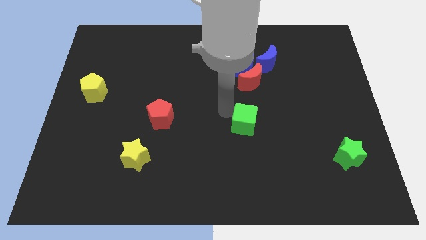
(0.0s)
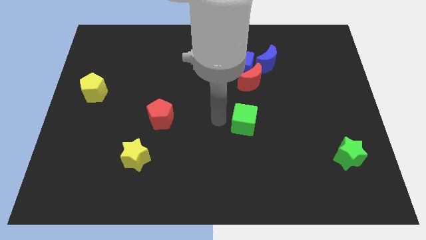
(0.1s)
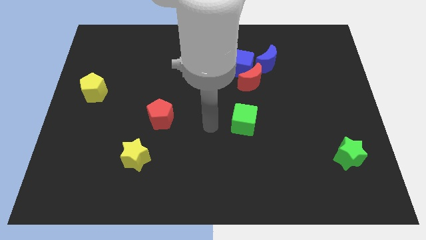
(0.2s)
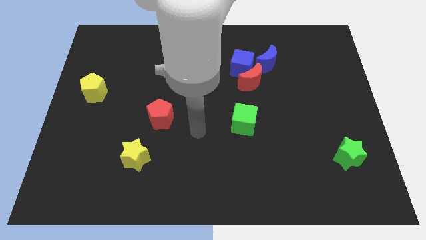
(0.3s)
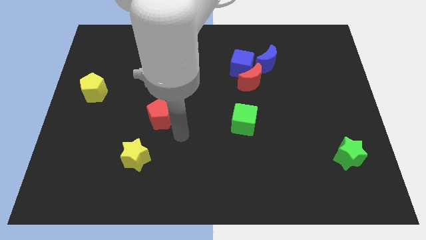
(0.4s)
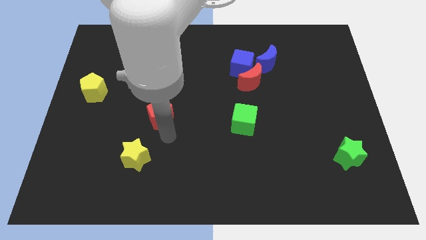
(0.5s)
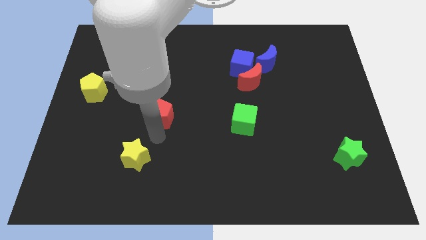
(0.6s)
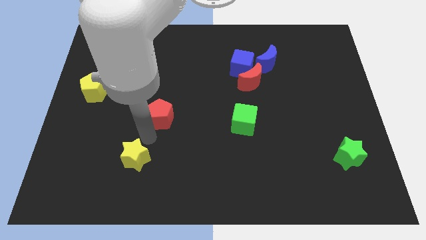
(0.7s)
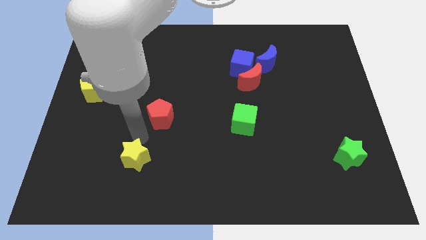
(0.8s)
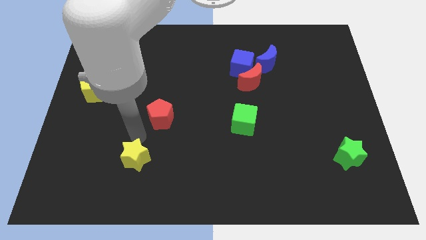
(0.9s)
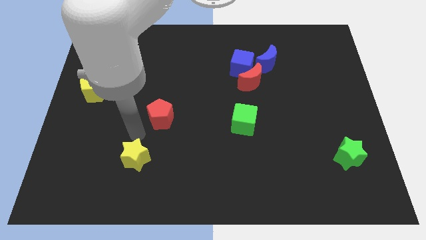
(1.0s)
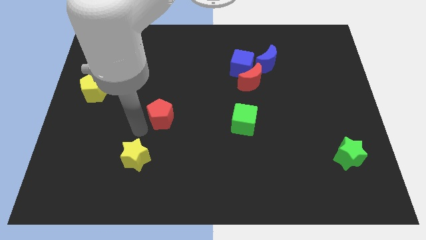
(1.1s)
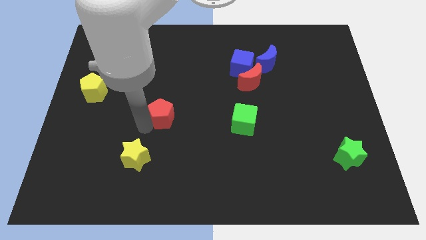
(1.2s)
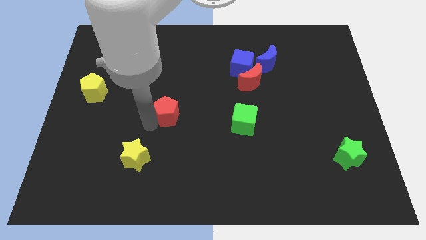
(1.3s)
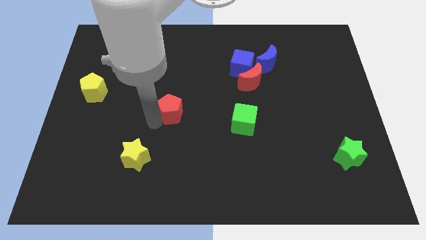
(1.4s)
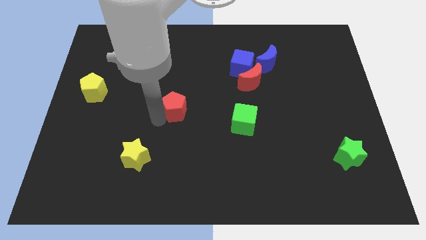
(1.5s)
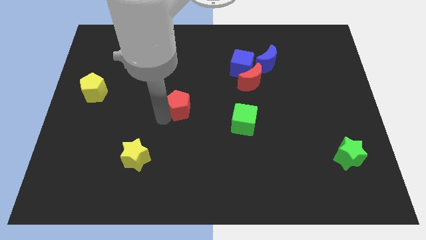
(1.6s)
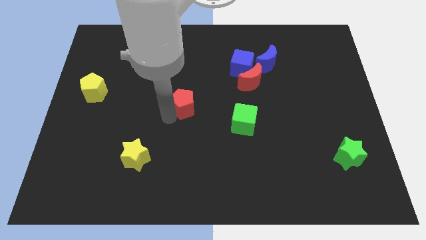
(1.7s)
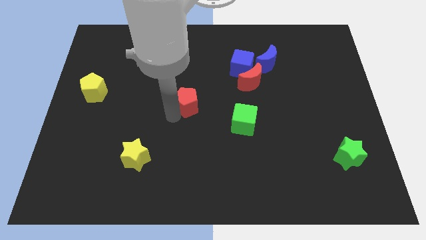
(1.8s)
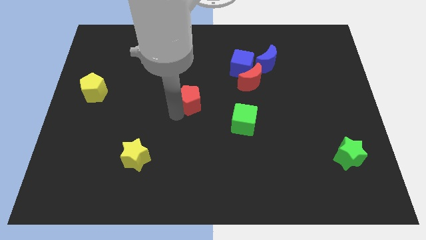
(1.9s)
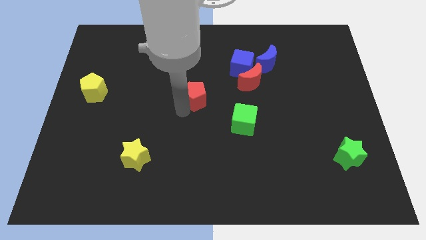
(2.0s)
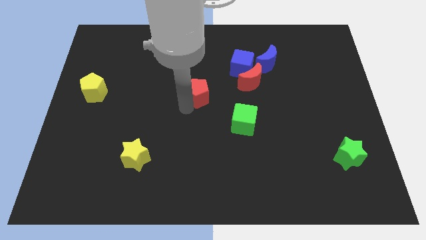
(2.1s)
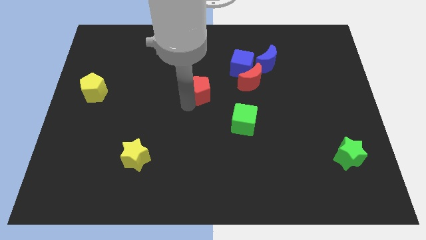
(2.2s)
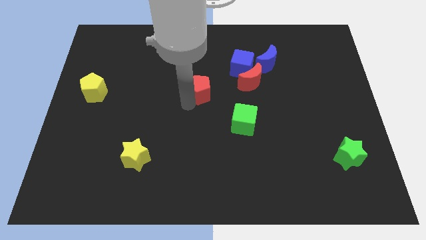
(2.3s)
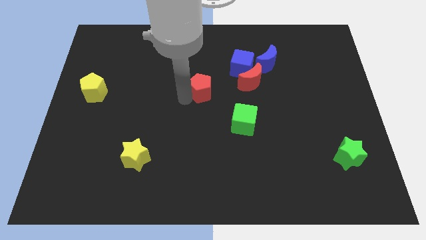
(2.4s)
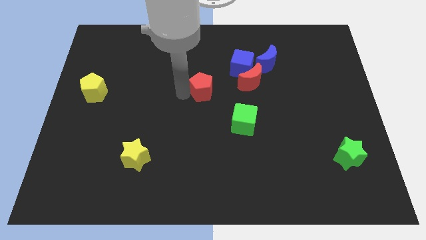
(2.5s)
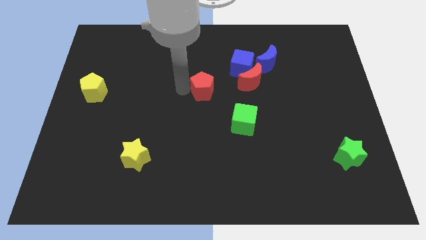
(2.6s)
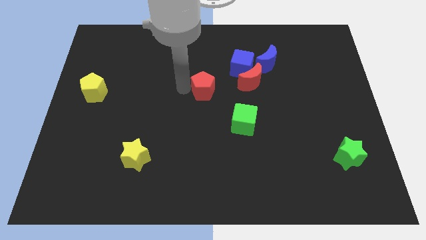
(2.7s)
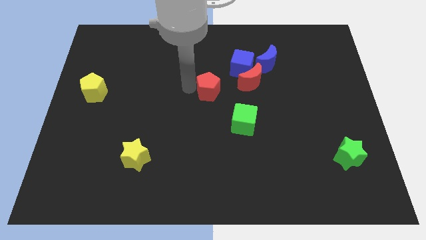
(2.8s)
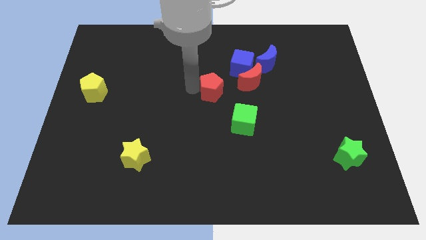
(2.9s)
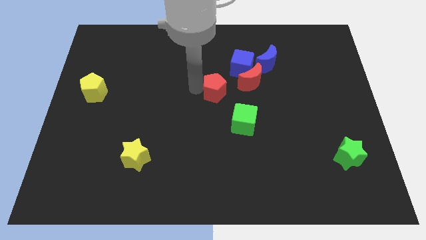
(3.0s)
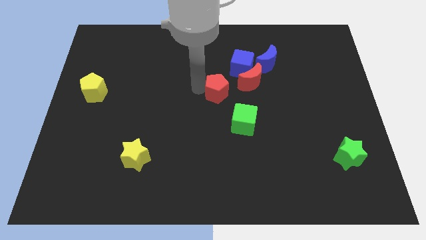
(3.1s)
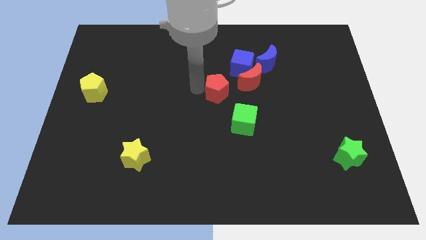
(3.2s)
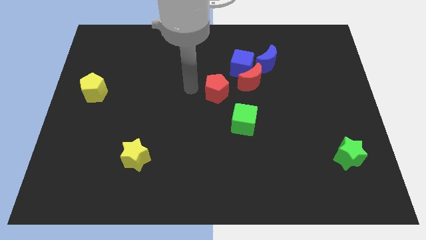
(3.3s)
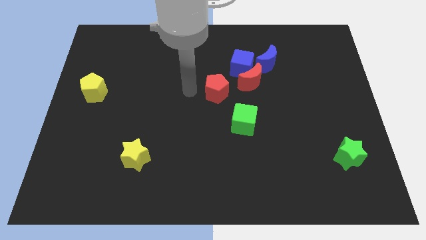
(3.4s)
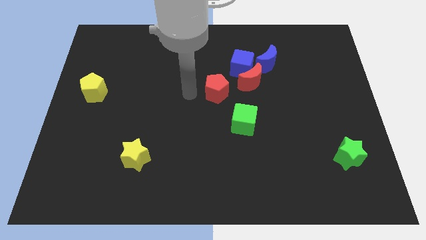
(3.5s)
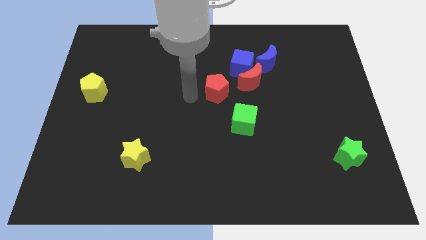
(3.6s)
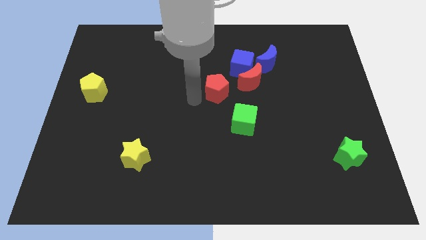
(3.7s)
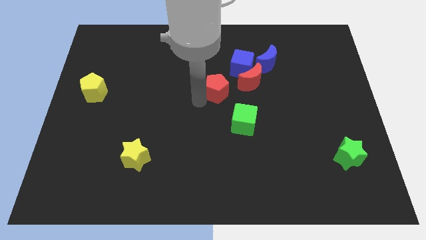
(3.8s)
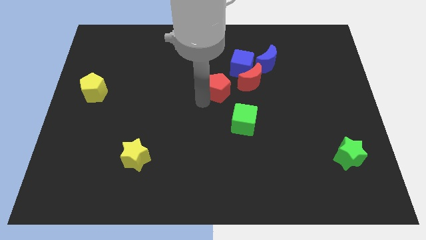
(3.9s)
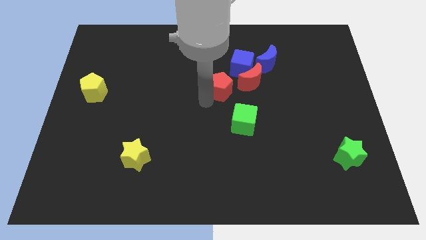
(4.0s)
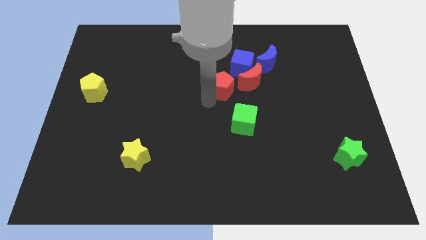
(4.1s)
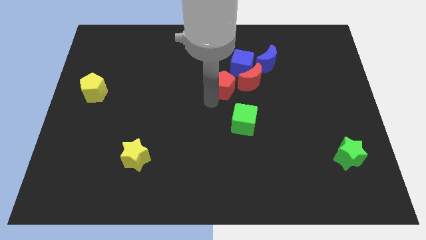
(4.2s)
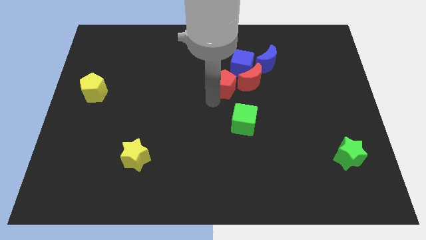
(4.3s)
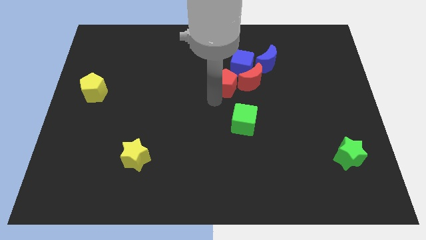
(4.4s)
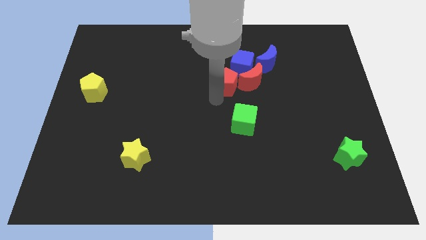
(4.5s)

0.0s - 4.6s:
push the red pentagon to the group of blocks

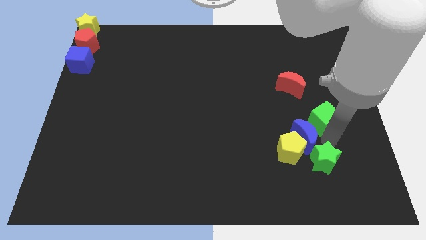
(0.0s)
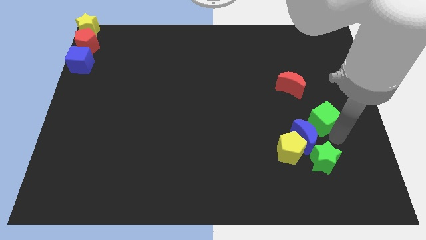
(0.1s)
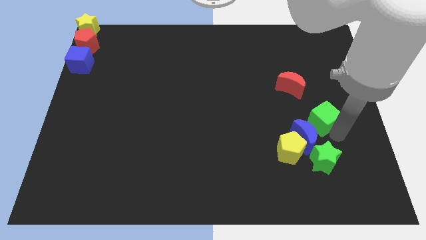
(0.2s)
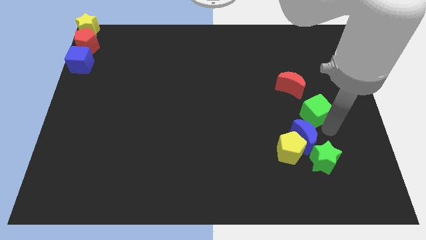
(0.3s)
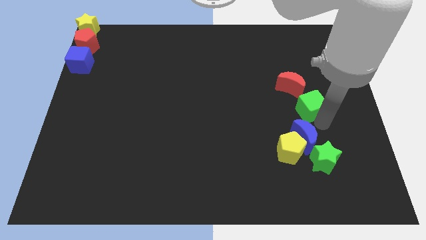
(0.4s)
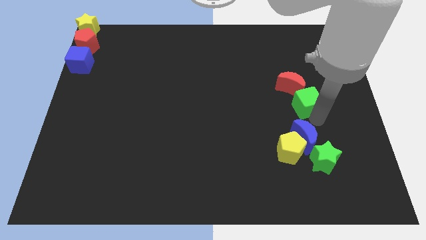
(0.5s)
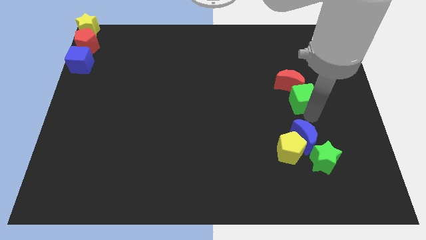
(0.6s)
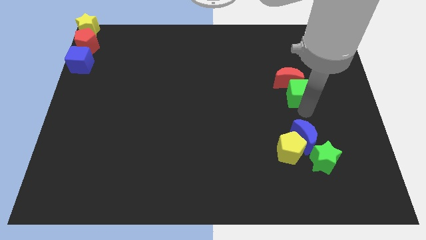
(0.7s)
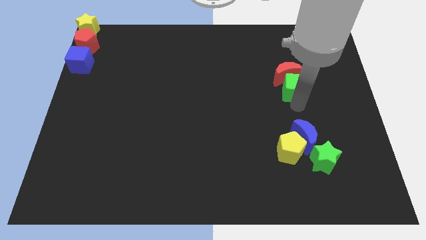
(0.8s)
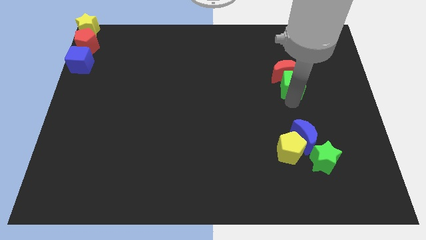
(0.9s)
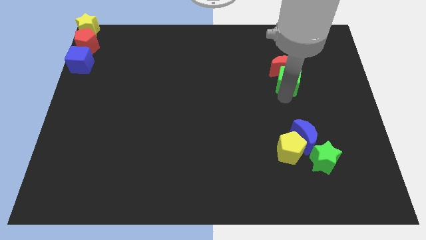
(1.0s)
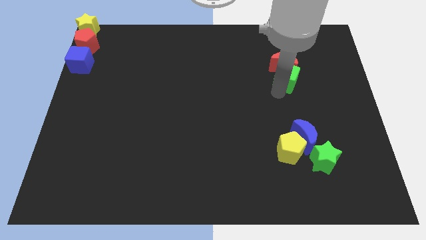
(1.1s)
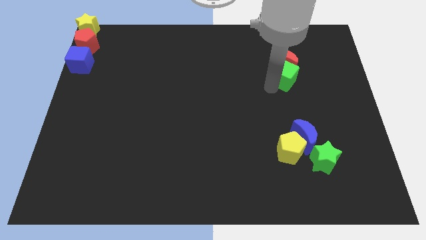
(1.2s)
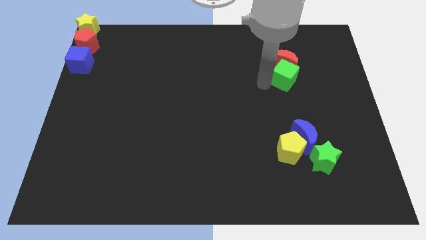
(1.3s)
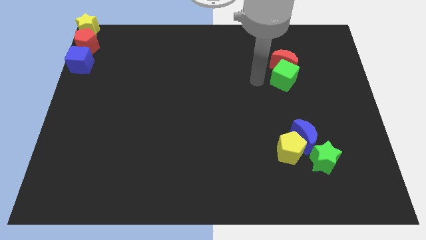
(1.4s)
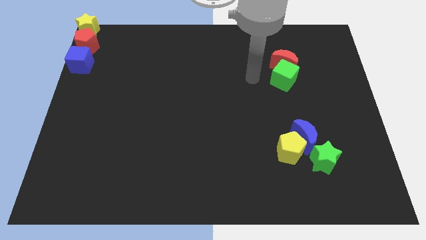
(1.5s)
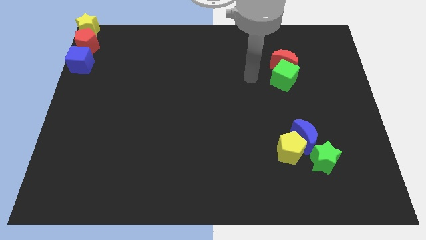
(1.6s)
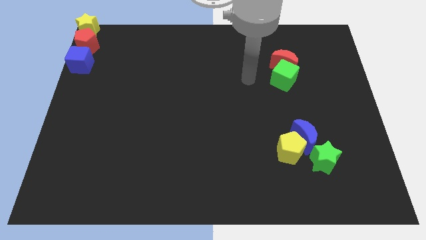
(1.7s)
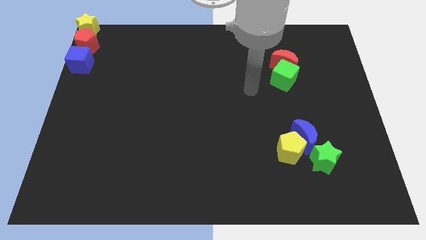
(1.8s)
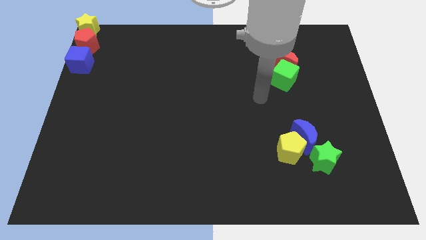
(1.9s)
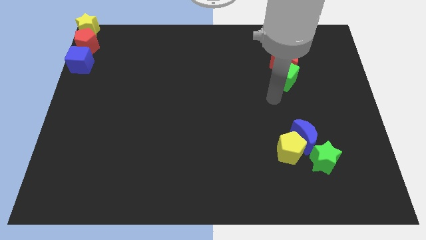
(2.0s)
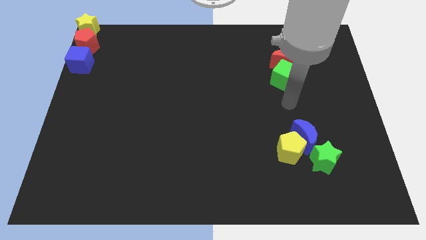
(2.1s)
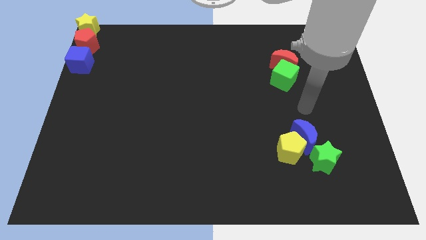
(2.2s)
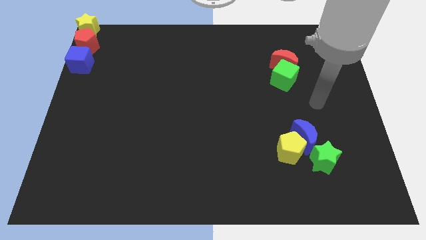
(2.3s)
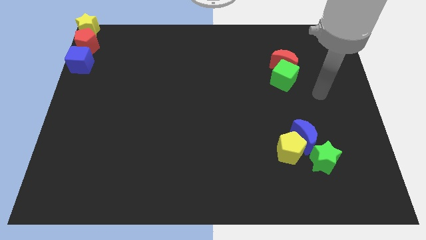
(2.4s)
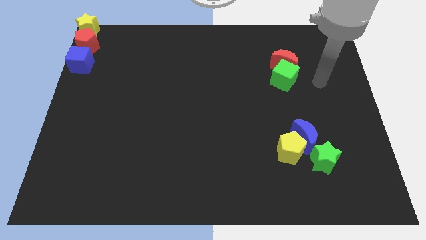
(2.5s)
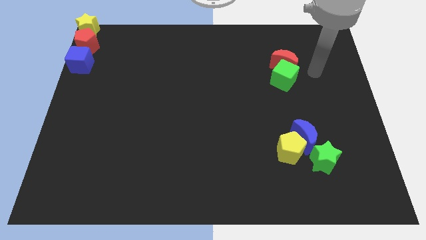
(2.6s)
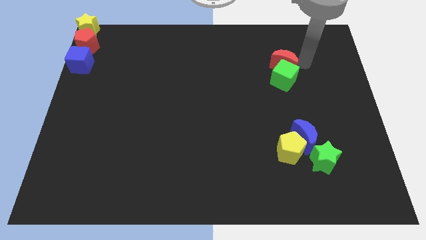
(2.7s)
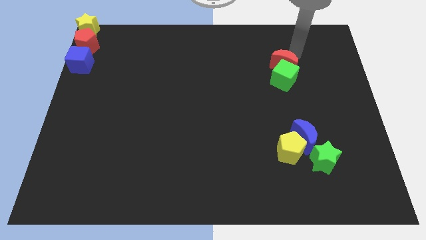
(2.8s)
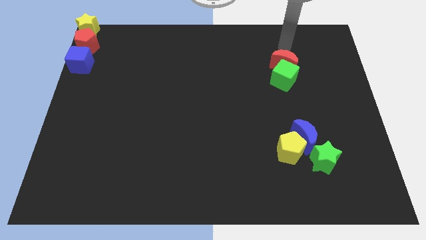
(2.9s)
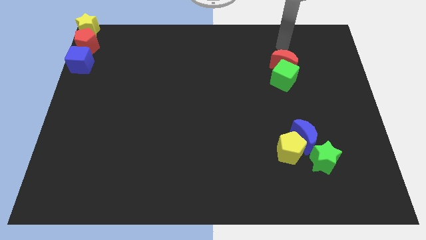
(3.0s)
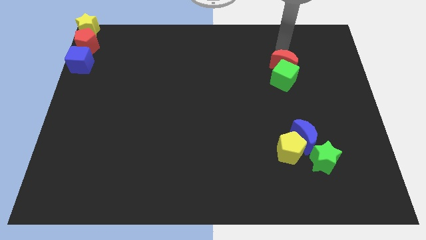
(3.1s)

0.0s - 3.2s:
push the green cube into the red moon

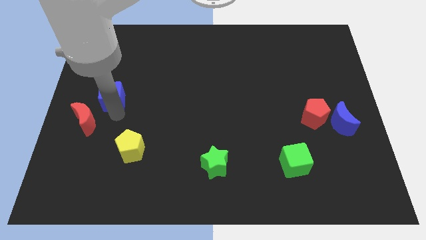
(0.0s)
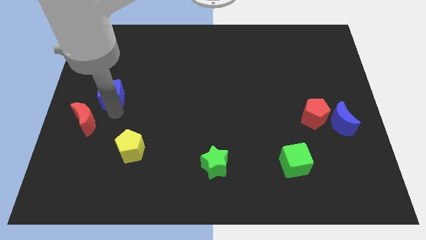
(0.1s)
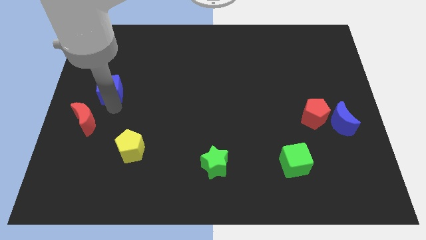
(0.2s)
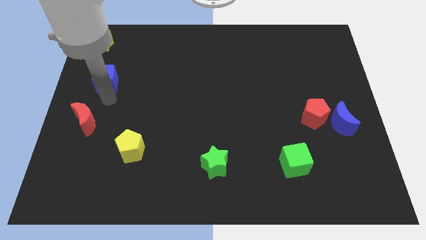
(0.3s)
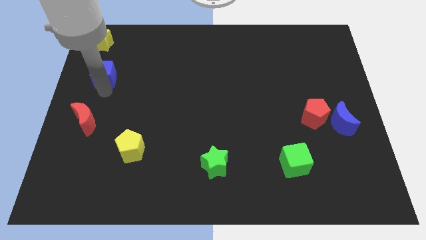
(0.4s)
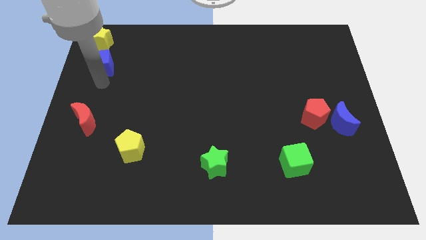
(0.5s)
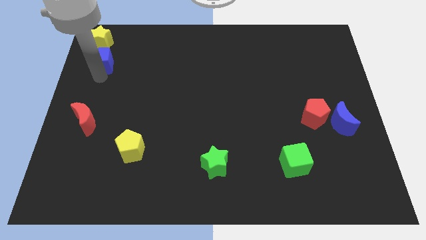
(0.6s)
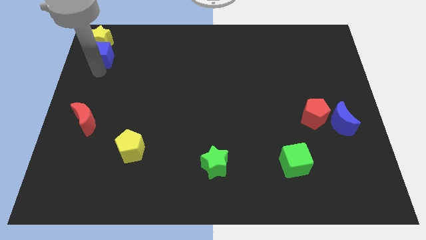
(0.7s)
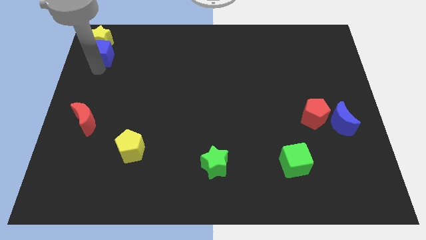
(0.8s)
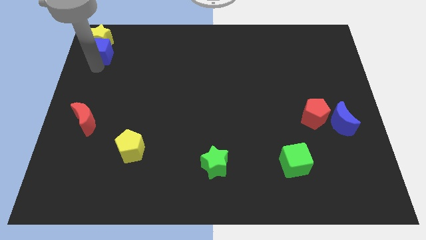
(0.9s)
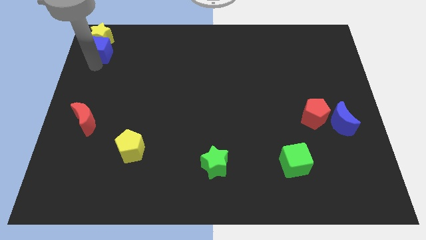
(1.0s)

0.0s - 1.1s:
push the blue cube into the bottom side of the yellow star
